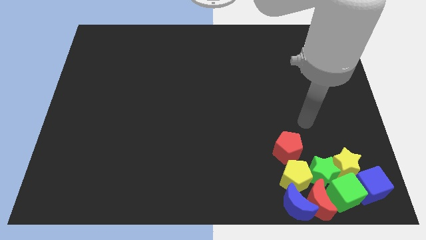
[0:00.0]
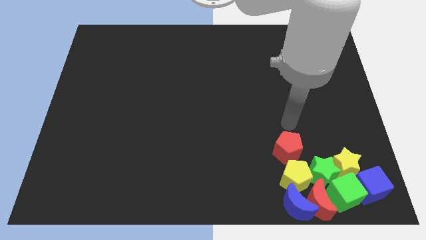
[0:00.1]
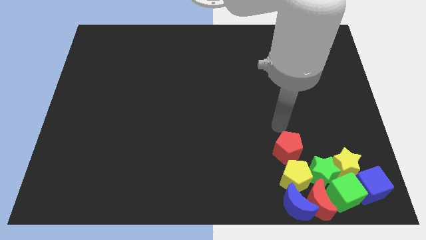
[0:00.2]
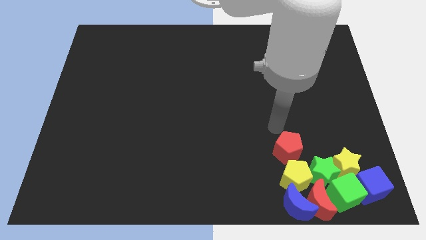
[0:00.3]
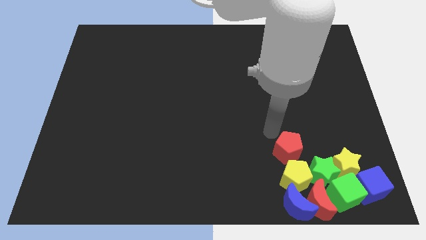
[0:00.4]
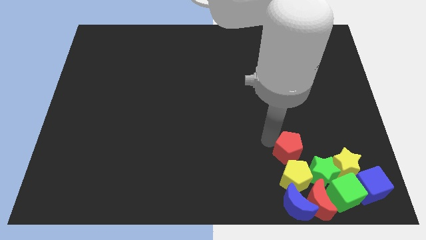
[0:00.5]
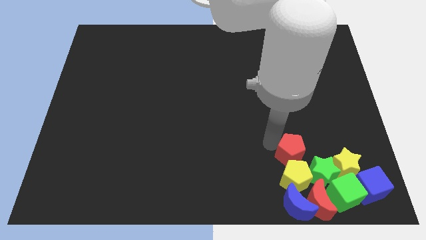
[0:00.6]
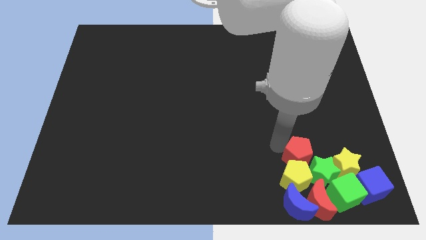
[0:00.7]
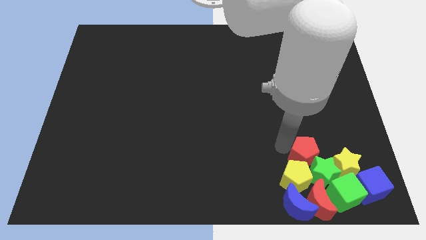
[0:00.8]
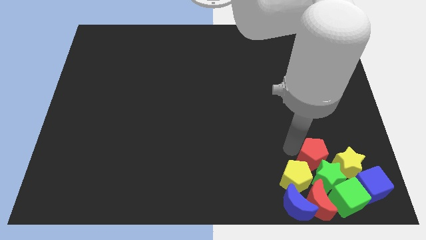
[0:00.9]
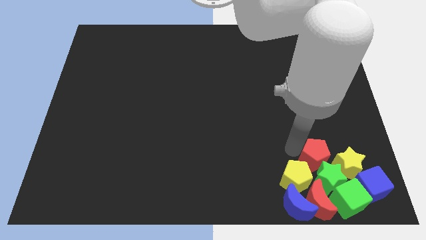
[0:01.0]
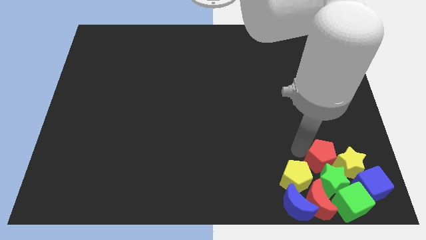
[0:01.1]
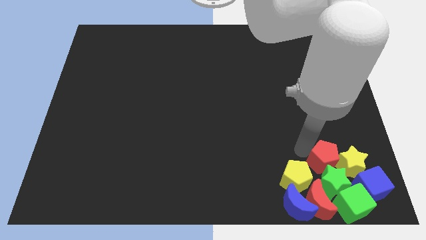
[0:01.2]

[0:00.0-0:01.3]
move the red pentagon to the top of the green star

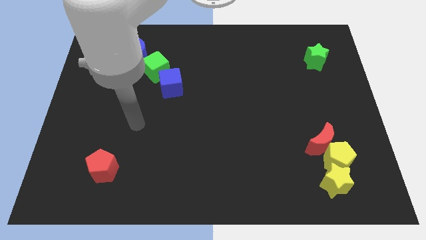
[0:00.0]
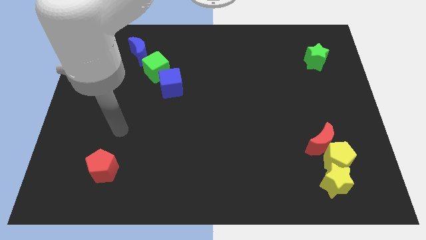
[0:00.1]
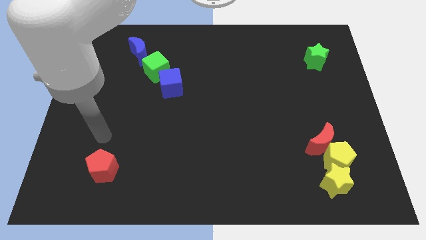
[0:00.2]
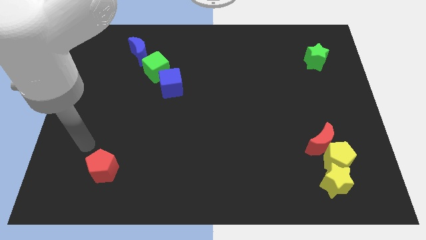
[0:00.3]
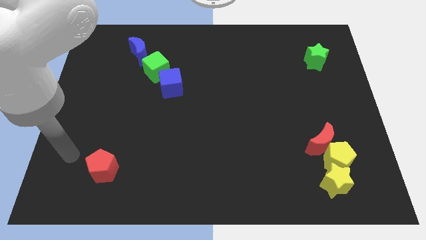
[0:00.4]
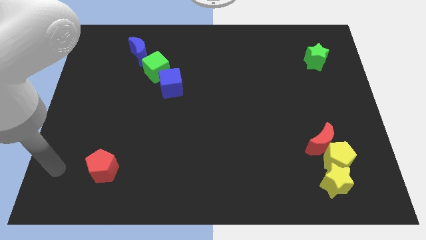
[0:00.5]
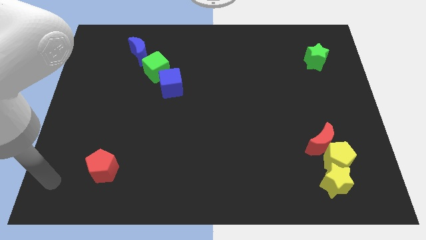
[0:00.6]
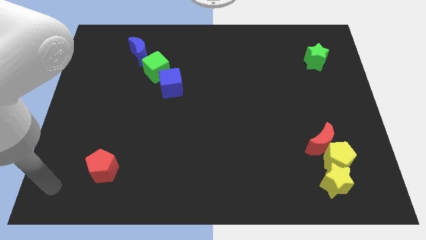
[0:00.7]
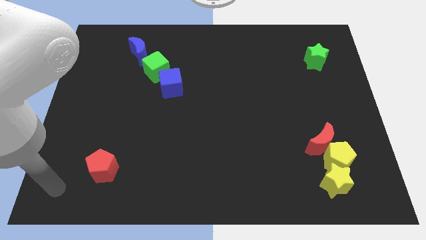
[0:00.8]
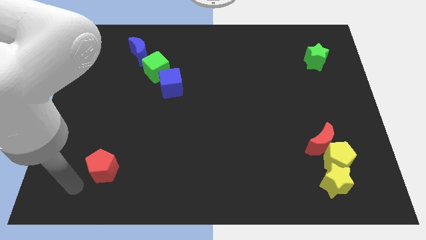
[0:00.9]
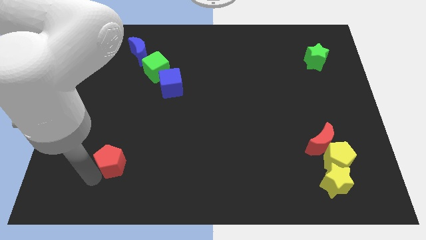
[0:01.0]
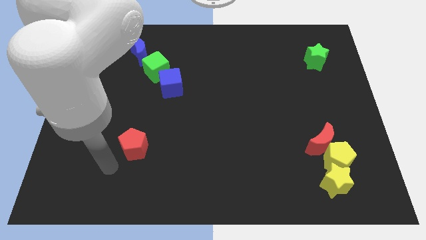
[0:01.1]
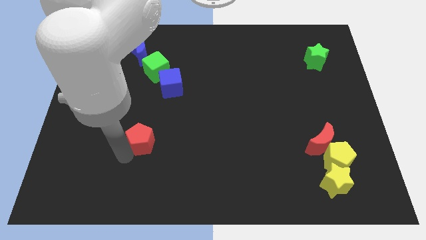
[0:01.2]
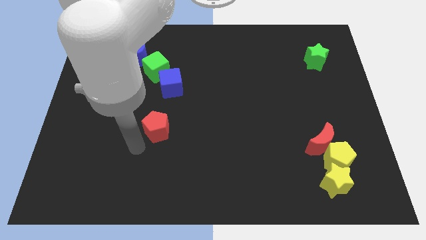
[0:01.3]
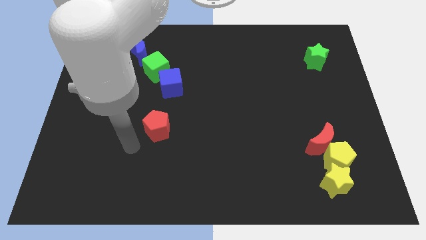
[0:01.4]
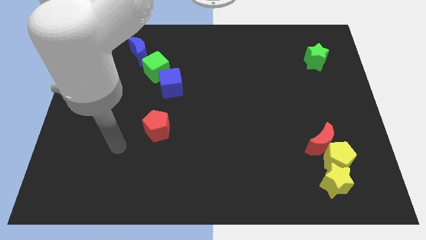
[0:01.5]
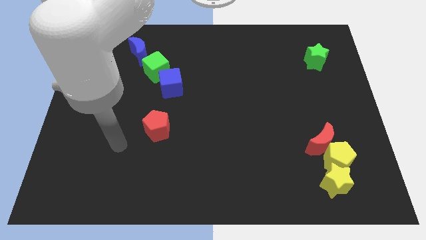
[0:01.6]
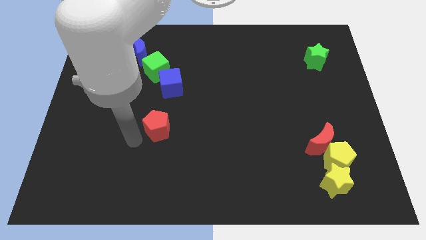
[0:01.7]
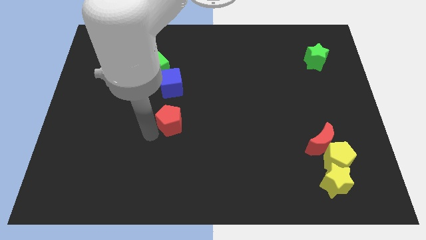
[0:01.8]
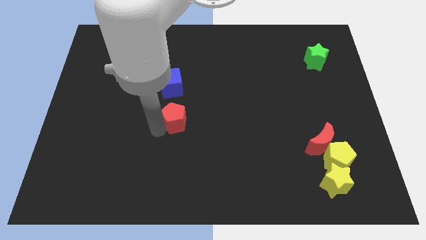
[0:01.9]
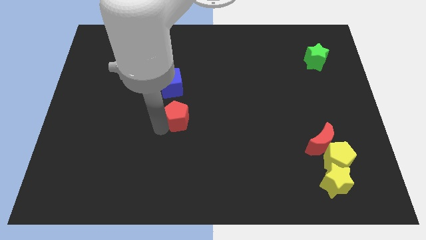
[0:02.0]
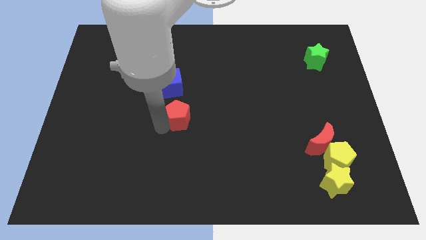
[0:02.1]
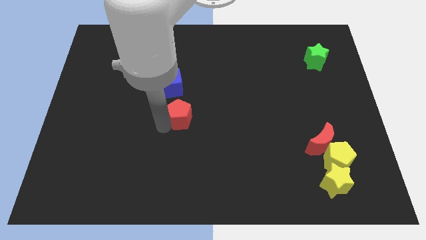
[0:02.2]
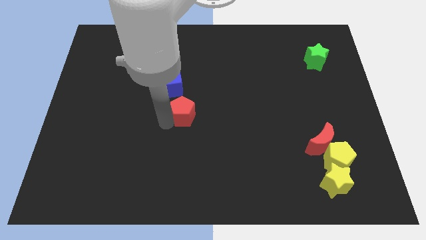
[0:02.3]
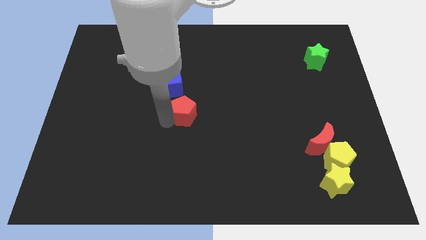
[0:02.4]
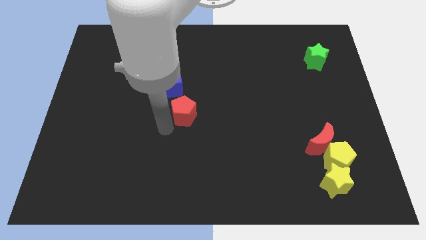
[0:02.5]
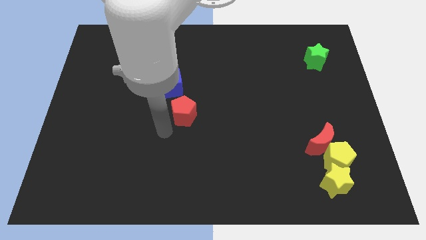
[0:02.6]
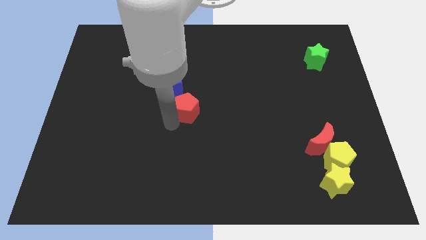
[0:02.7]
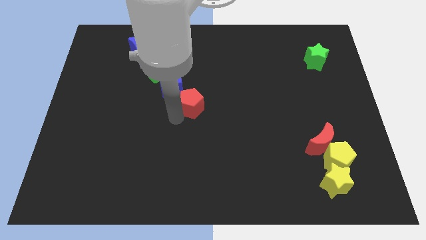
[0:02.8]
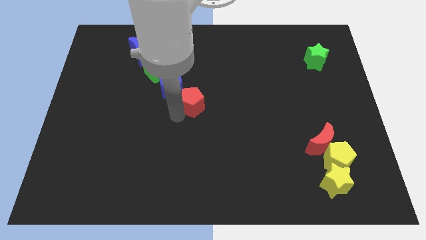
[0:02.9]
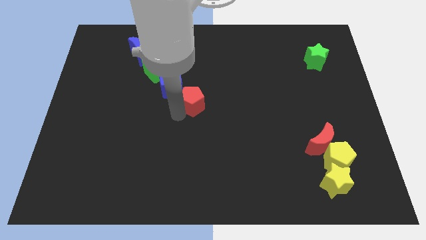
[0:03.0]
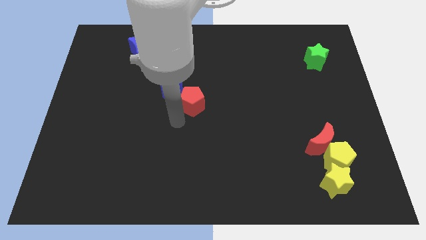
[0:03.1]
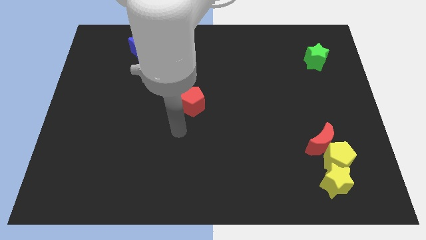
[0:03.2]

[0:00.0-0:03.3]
push the red pentagon to the bottom of the blue cube

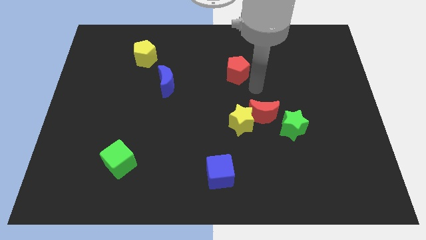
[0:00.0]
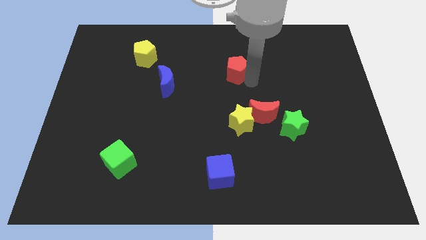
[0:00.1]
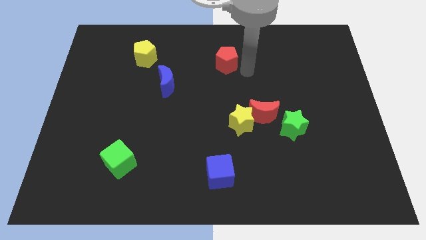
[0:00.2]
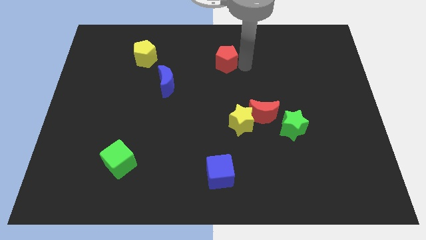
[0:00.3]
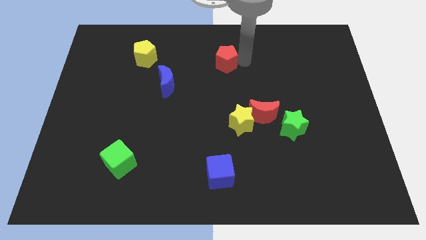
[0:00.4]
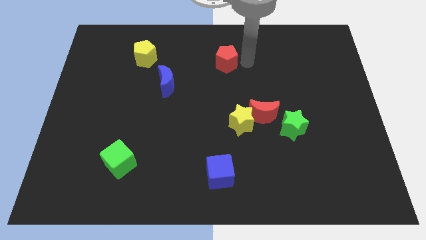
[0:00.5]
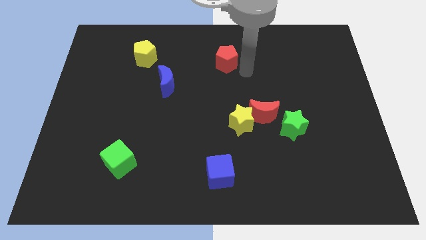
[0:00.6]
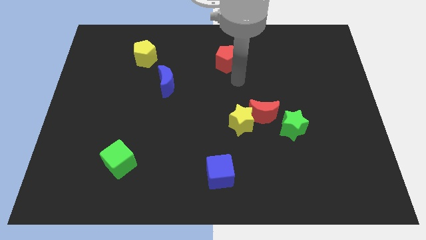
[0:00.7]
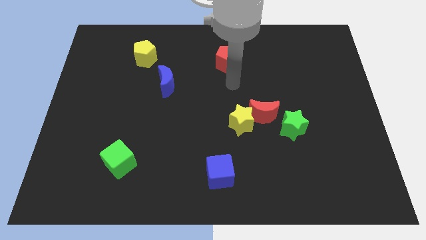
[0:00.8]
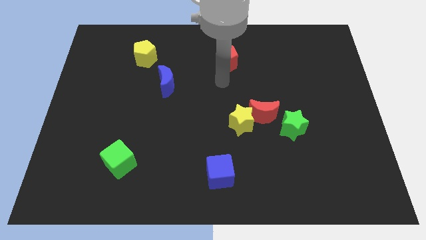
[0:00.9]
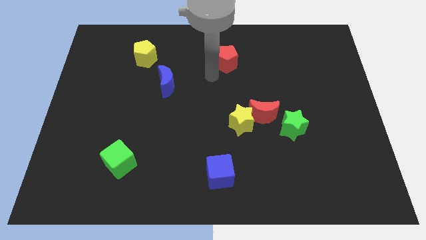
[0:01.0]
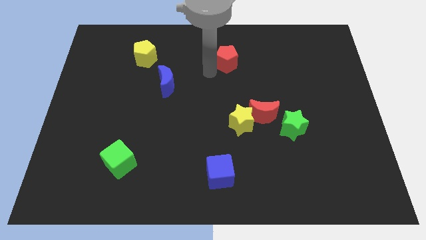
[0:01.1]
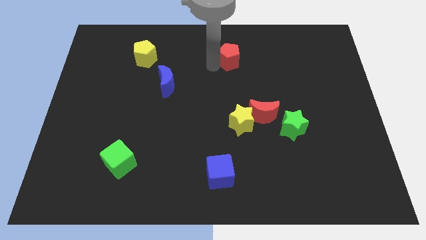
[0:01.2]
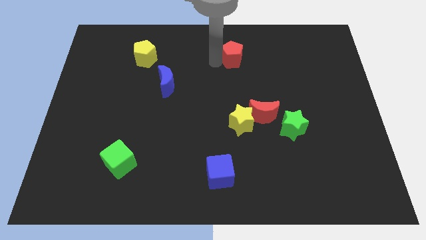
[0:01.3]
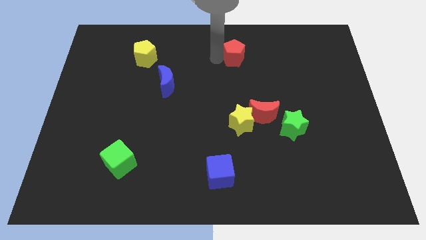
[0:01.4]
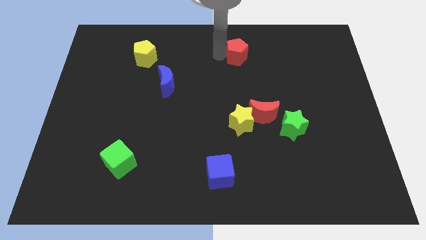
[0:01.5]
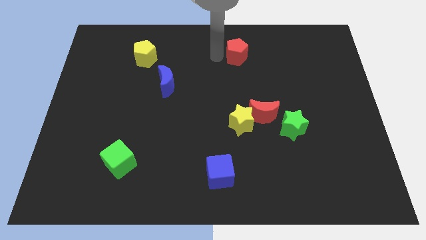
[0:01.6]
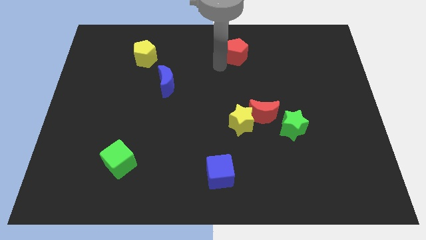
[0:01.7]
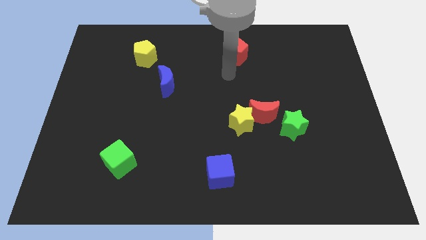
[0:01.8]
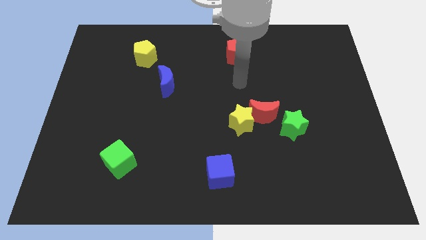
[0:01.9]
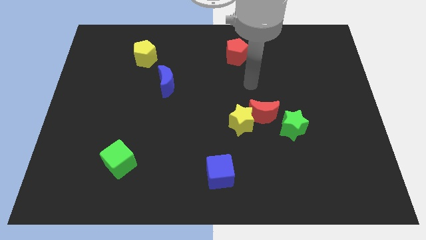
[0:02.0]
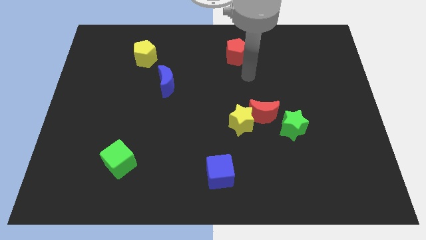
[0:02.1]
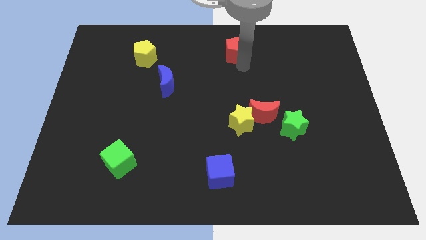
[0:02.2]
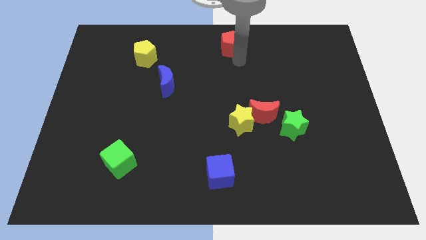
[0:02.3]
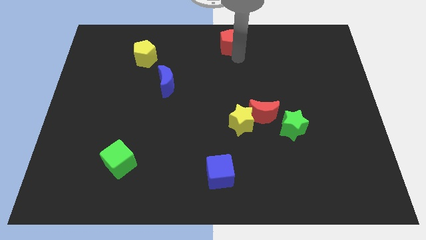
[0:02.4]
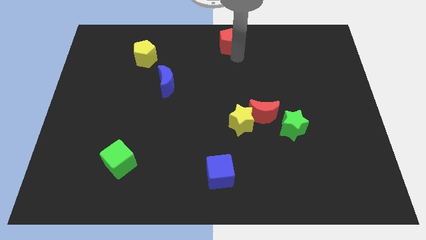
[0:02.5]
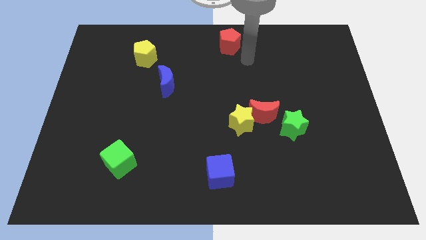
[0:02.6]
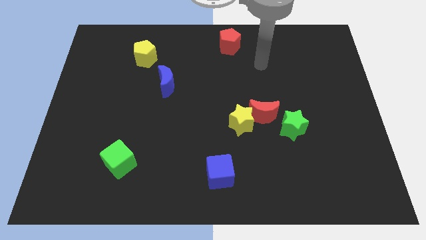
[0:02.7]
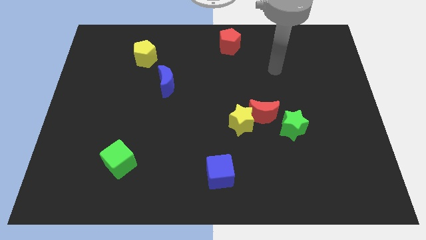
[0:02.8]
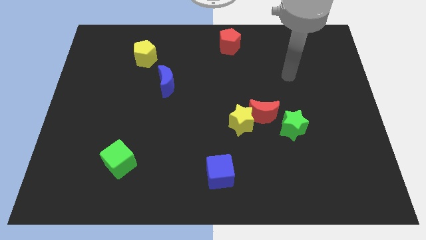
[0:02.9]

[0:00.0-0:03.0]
move red pentagon to center top of the board

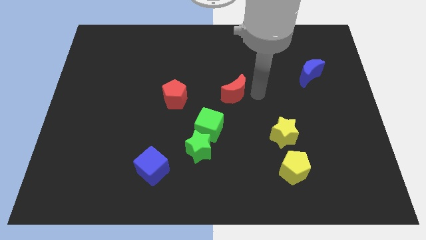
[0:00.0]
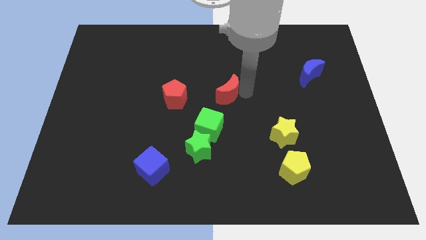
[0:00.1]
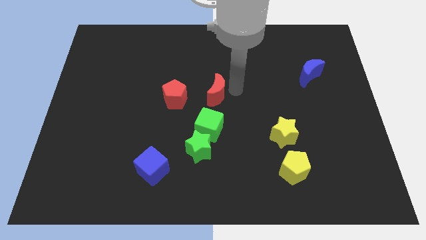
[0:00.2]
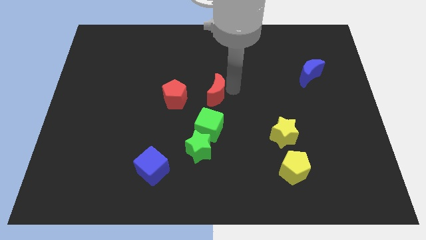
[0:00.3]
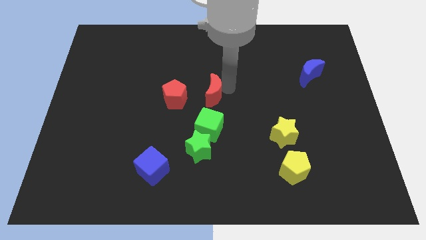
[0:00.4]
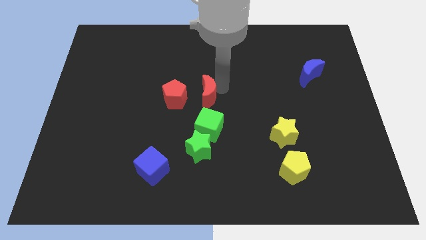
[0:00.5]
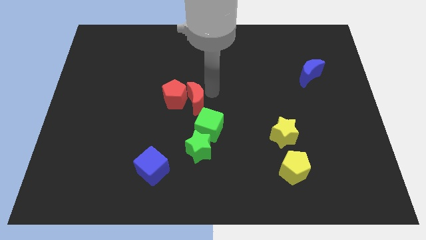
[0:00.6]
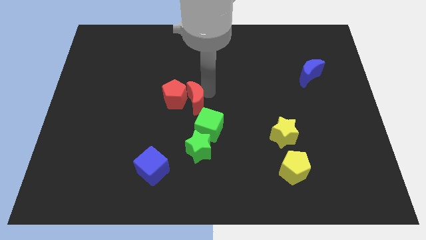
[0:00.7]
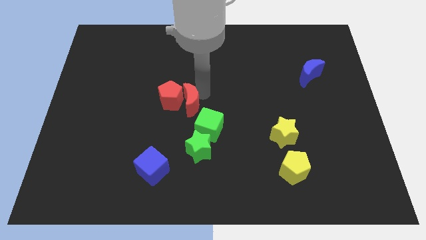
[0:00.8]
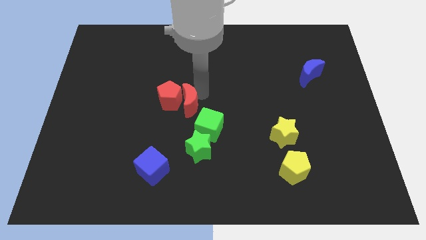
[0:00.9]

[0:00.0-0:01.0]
push the red moon into the red pentagon

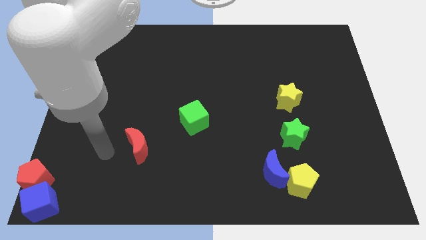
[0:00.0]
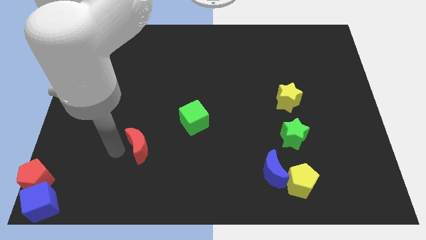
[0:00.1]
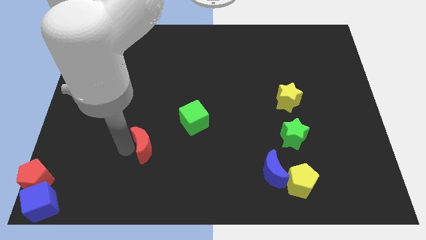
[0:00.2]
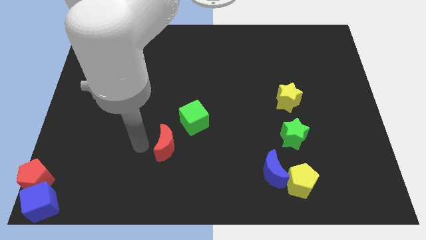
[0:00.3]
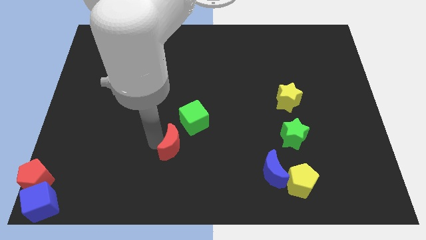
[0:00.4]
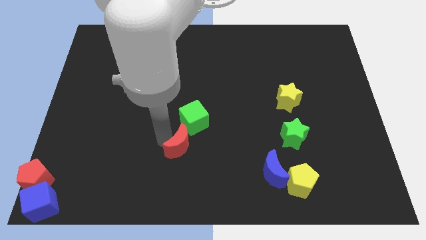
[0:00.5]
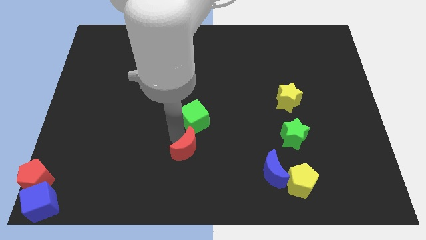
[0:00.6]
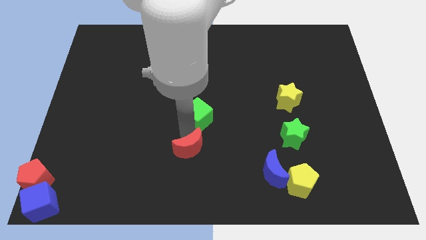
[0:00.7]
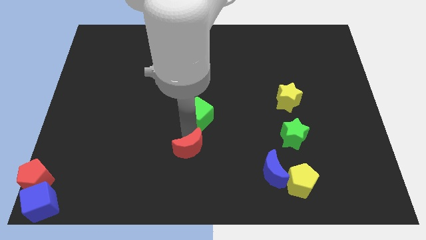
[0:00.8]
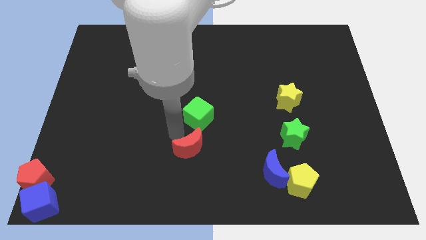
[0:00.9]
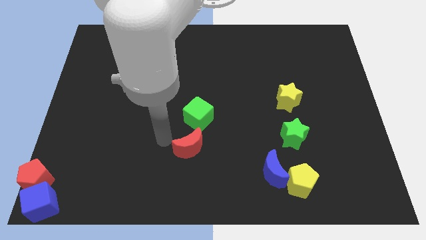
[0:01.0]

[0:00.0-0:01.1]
place the red moon below the green cube
